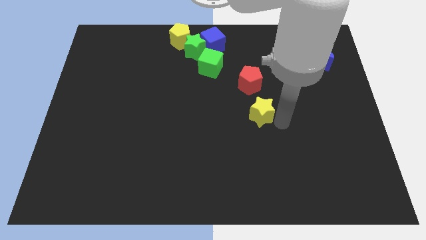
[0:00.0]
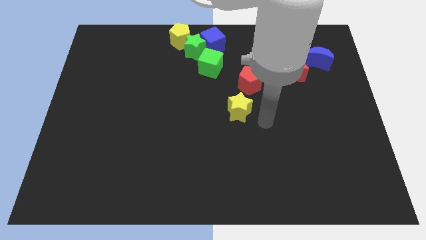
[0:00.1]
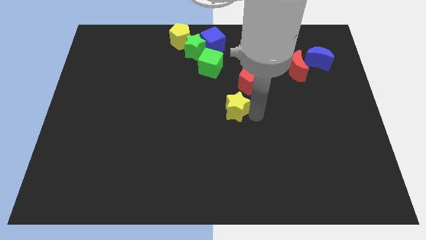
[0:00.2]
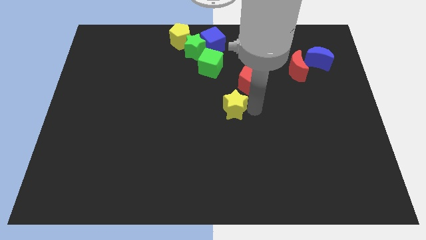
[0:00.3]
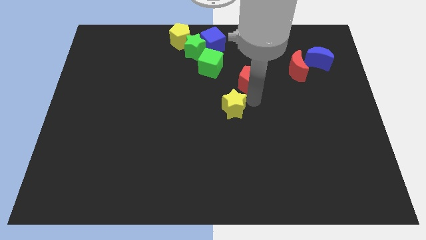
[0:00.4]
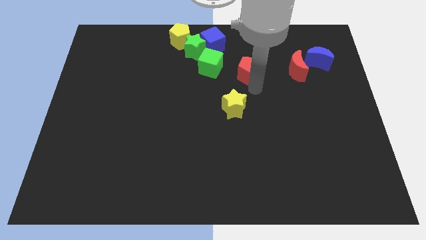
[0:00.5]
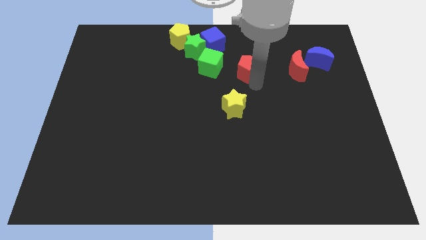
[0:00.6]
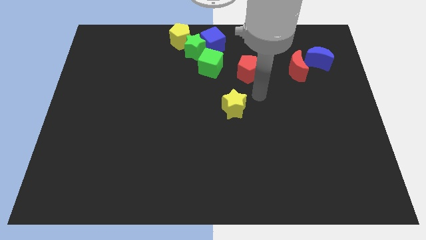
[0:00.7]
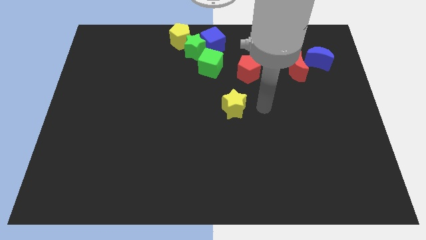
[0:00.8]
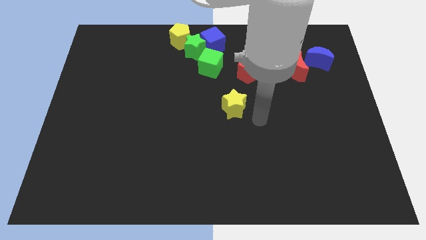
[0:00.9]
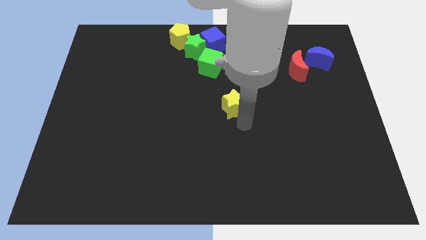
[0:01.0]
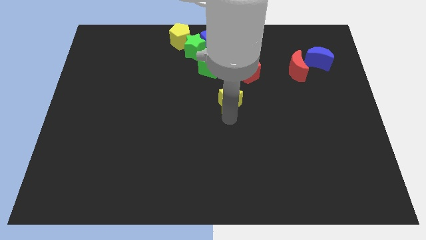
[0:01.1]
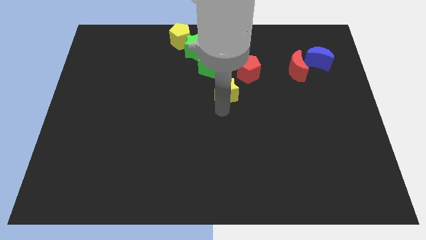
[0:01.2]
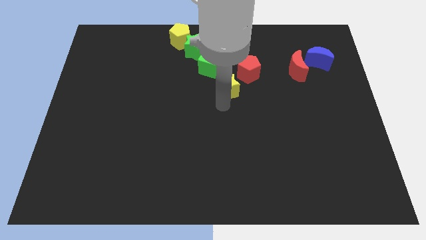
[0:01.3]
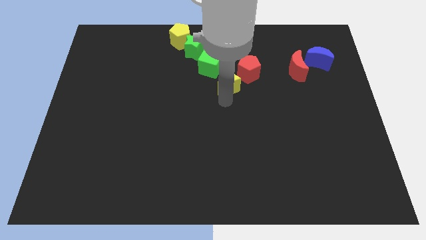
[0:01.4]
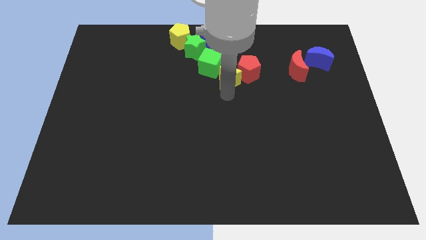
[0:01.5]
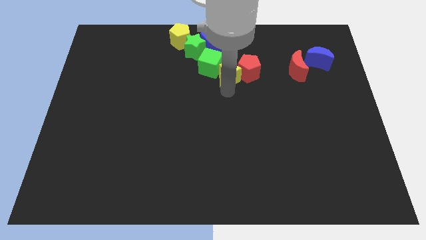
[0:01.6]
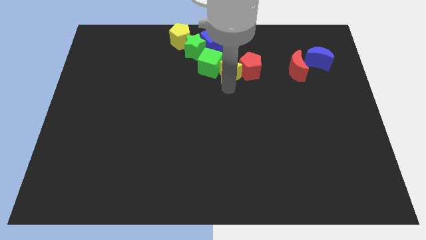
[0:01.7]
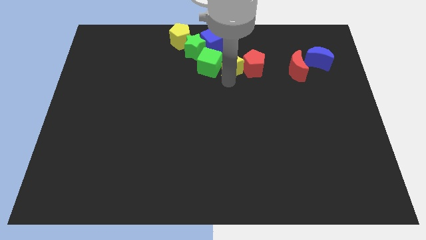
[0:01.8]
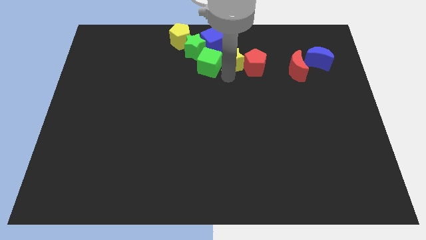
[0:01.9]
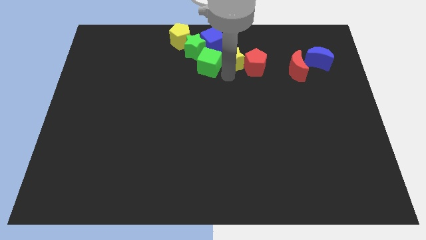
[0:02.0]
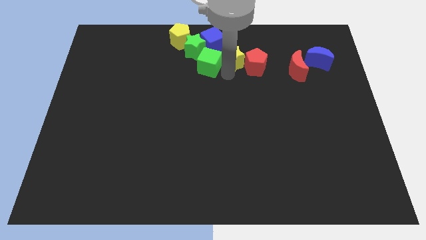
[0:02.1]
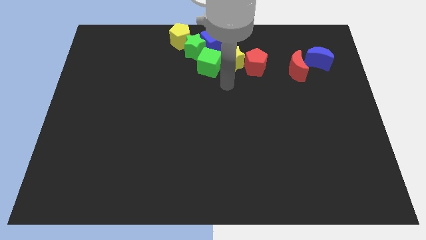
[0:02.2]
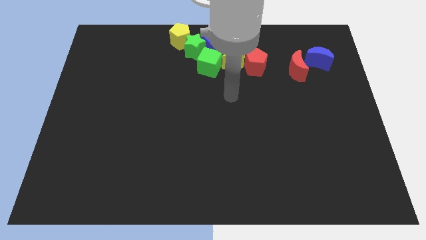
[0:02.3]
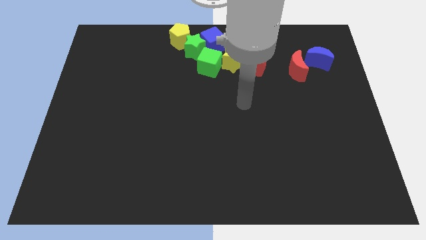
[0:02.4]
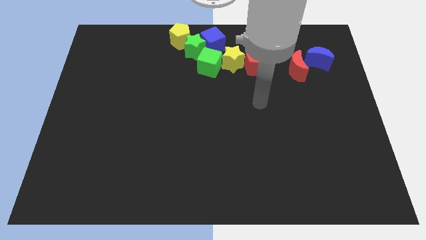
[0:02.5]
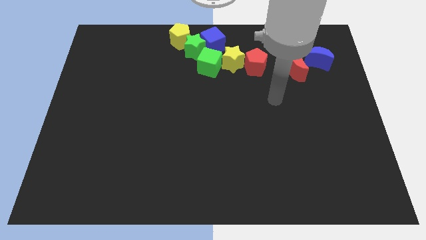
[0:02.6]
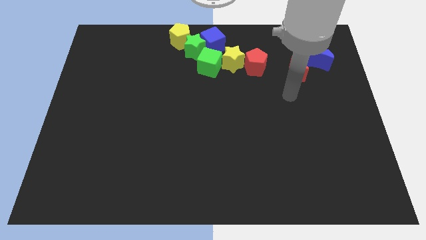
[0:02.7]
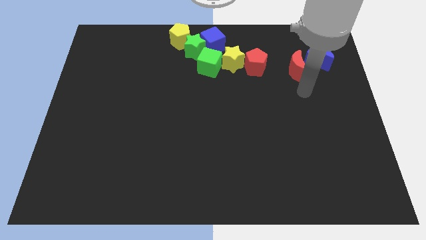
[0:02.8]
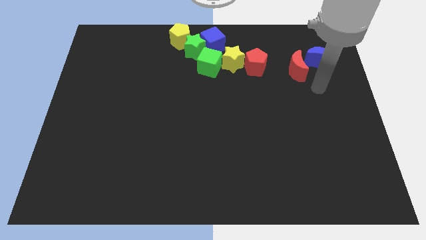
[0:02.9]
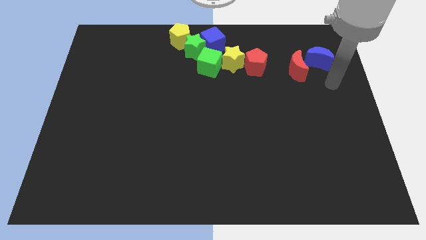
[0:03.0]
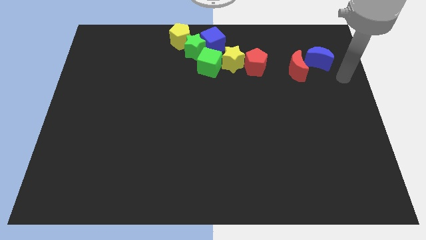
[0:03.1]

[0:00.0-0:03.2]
place yellow star to the right of green cube

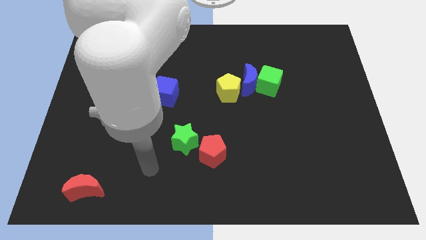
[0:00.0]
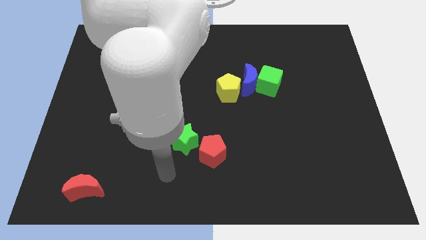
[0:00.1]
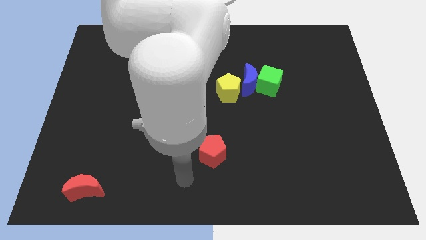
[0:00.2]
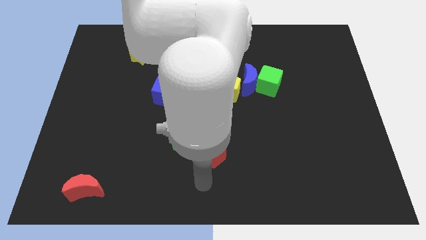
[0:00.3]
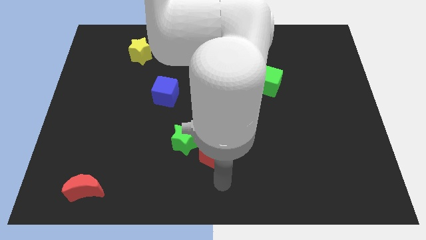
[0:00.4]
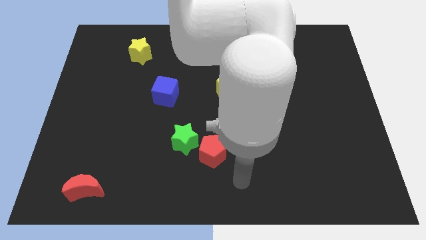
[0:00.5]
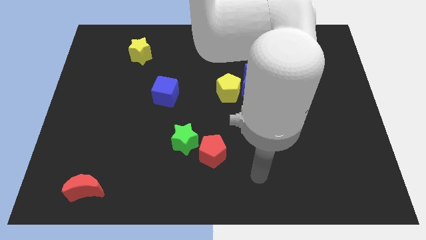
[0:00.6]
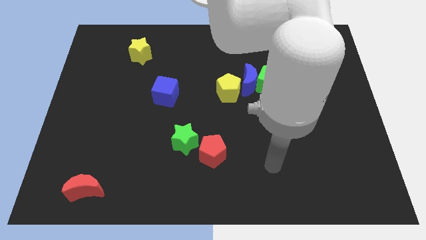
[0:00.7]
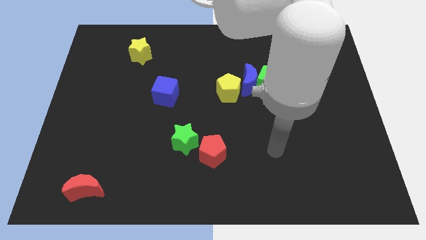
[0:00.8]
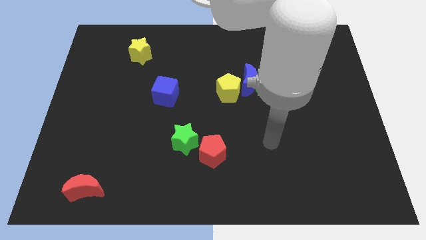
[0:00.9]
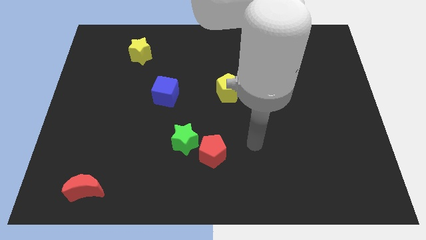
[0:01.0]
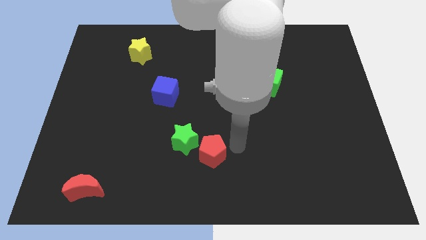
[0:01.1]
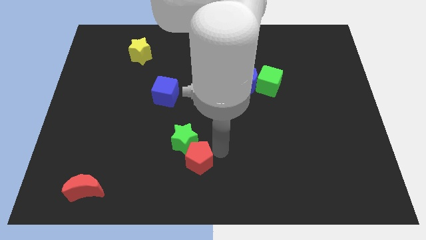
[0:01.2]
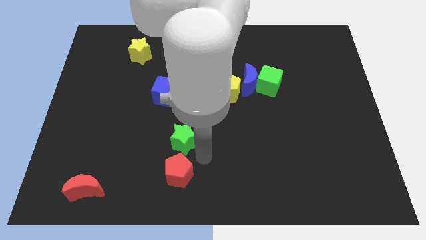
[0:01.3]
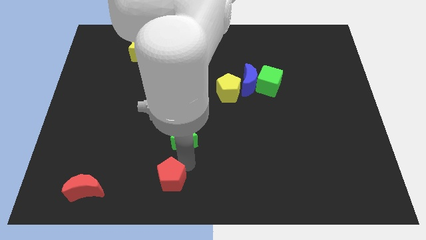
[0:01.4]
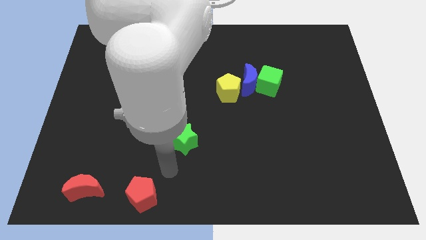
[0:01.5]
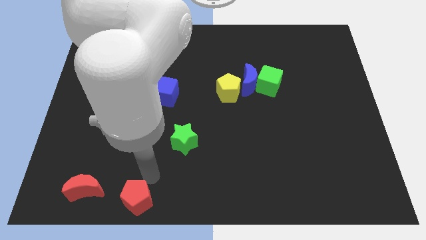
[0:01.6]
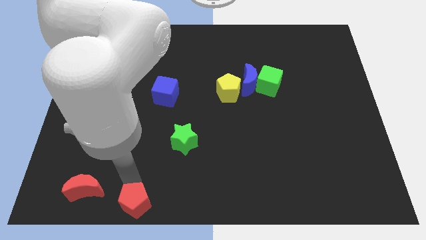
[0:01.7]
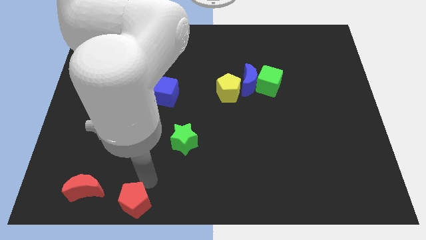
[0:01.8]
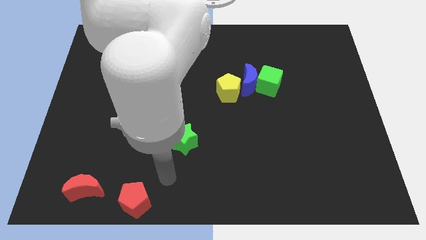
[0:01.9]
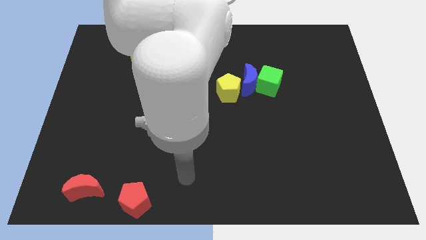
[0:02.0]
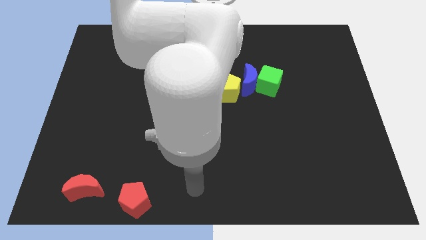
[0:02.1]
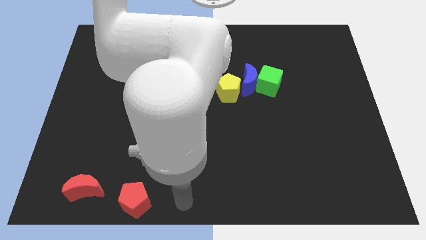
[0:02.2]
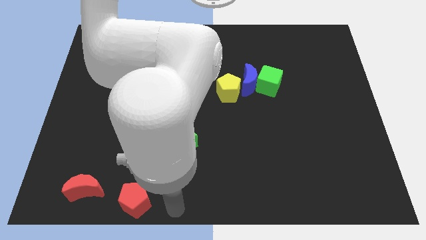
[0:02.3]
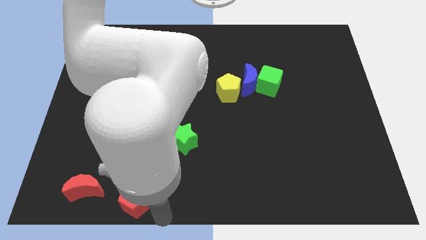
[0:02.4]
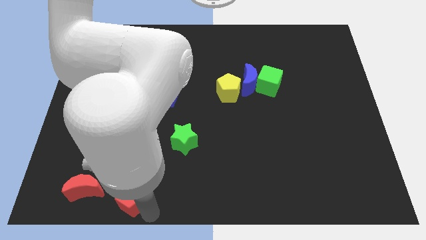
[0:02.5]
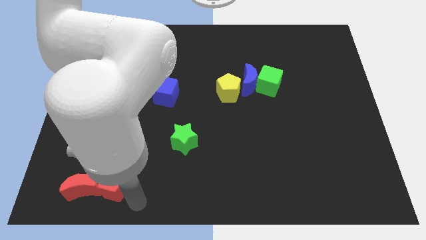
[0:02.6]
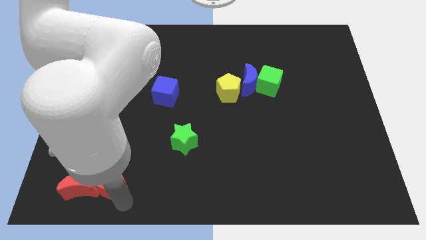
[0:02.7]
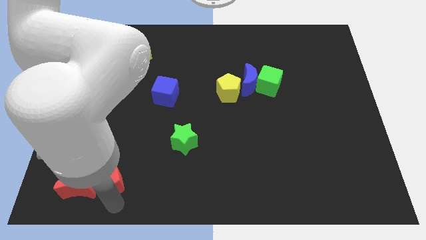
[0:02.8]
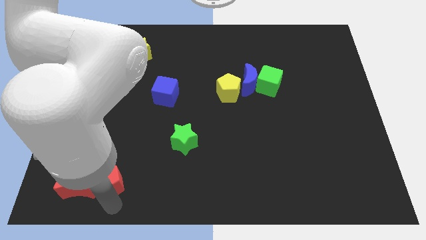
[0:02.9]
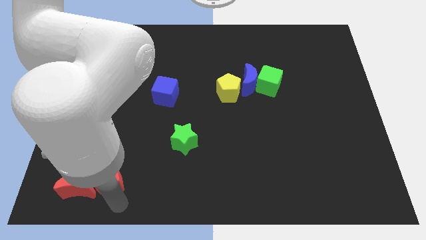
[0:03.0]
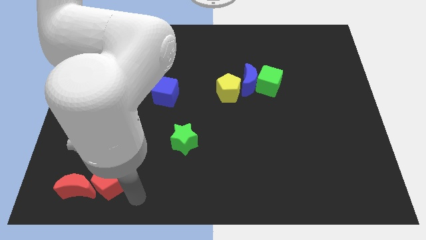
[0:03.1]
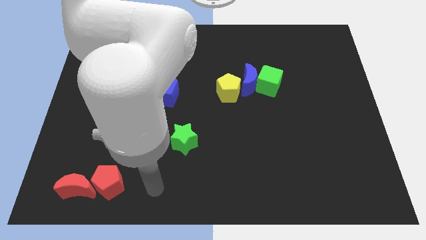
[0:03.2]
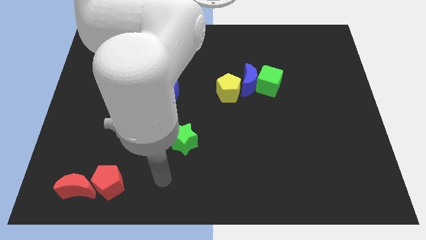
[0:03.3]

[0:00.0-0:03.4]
push the red pentagon into the red crescent

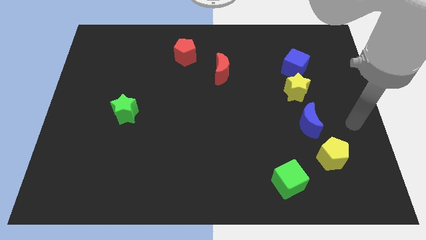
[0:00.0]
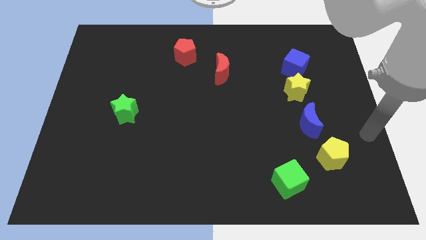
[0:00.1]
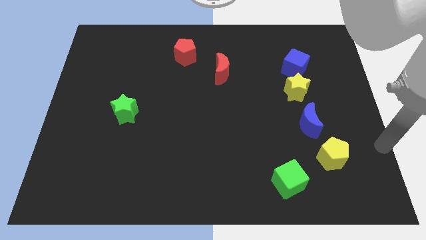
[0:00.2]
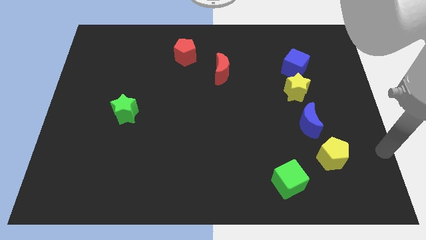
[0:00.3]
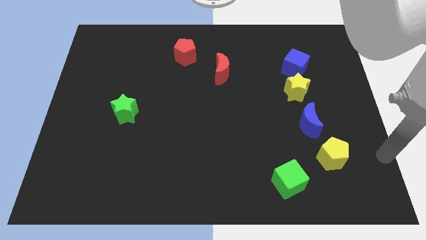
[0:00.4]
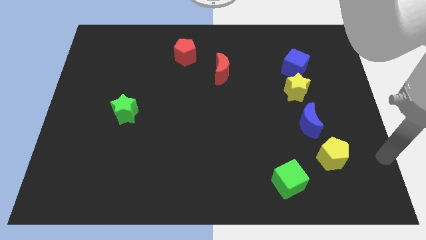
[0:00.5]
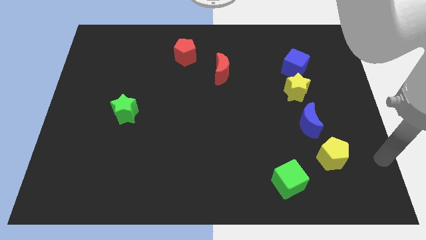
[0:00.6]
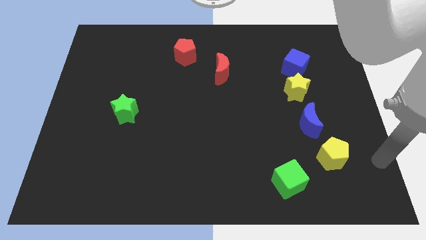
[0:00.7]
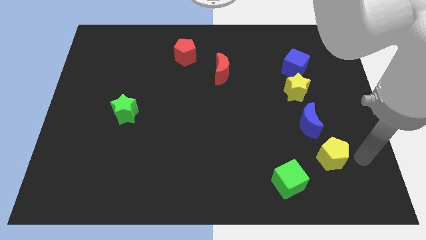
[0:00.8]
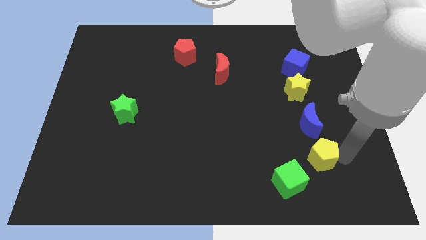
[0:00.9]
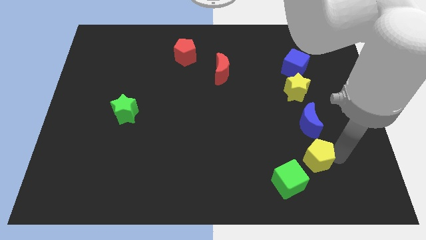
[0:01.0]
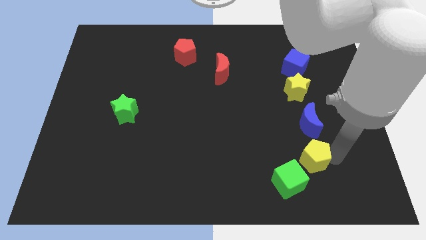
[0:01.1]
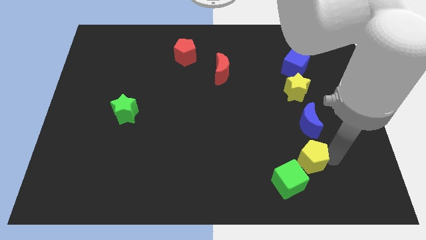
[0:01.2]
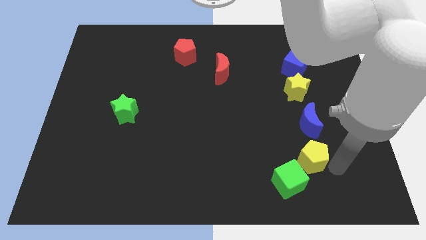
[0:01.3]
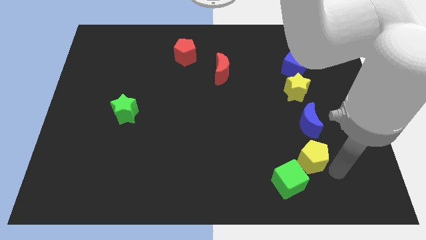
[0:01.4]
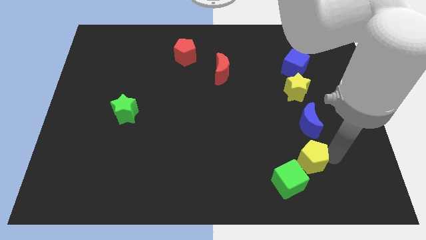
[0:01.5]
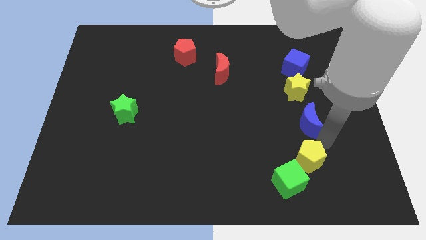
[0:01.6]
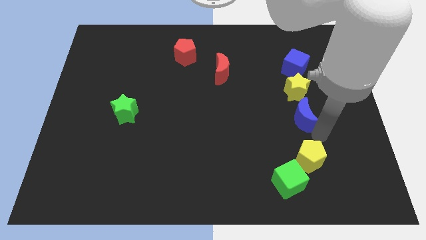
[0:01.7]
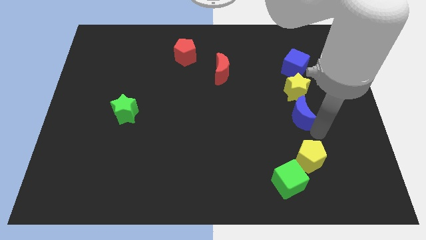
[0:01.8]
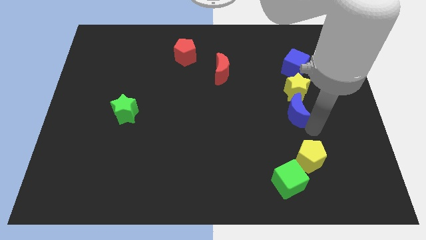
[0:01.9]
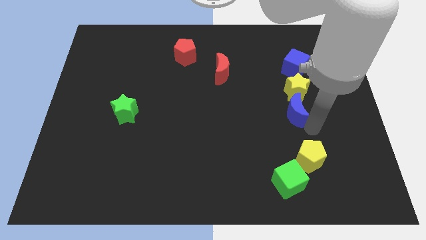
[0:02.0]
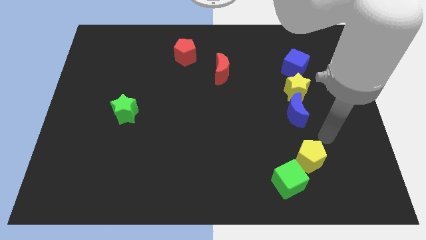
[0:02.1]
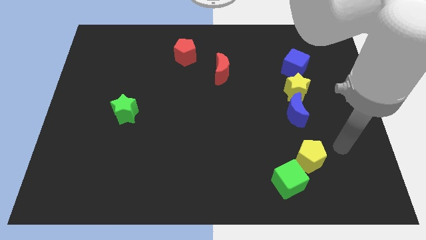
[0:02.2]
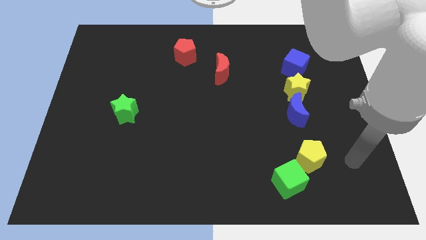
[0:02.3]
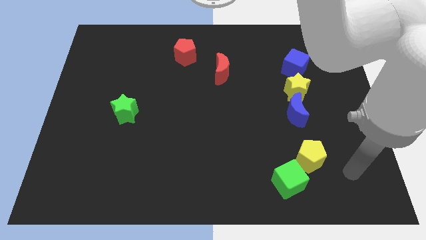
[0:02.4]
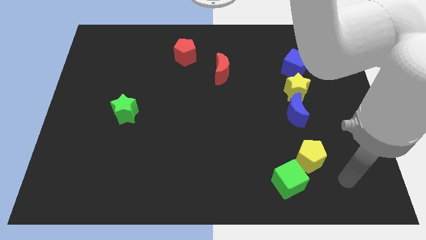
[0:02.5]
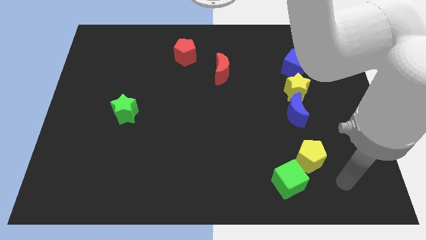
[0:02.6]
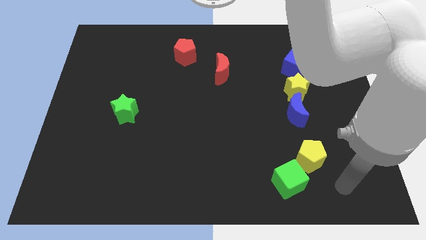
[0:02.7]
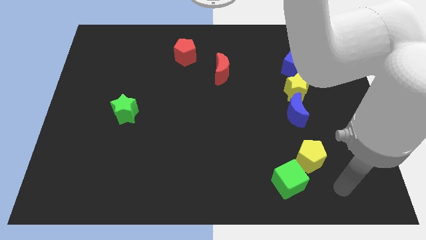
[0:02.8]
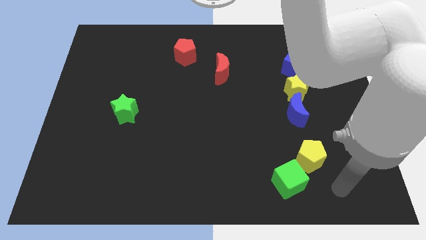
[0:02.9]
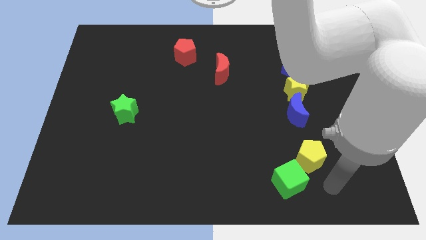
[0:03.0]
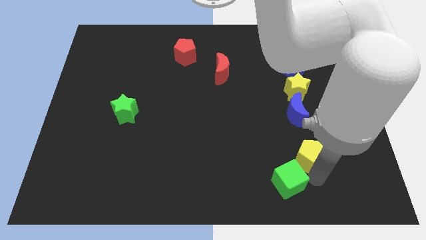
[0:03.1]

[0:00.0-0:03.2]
push blue crecent to the bottom of yellow star
